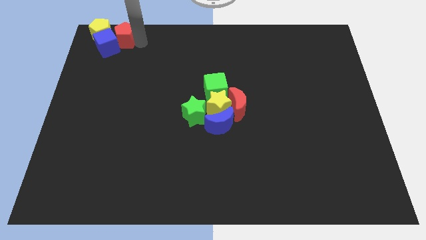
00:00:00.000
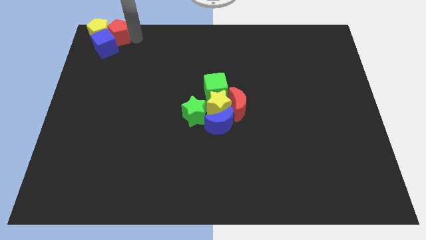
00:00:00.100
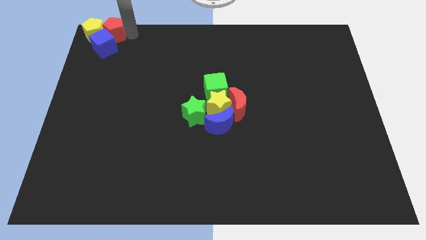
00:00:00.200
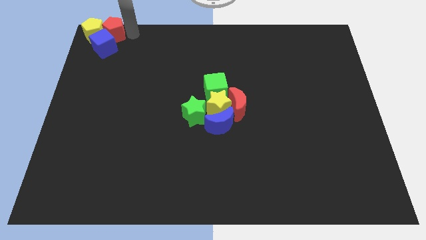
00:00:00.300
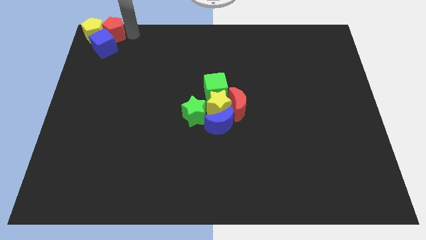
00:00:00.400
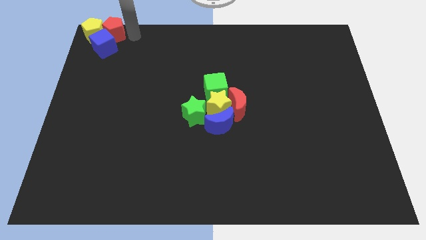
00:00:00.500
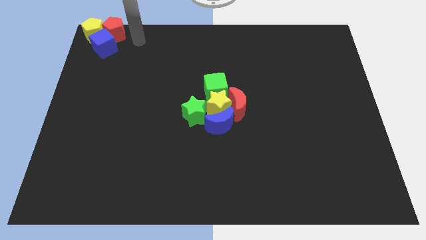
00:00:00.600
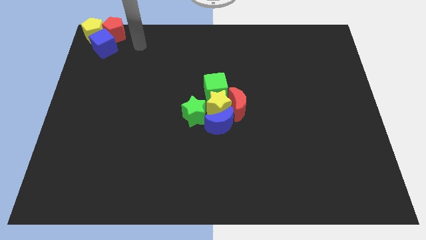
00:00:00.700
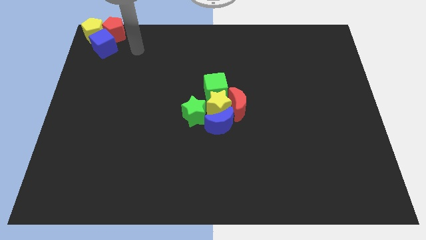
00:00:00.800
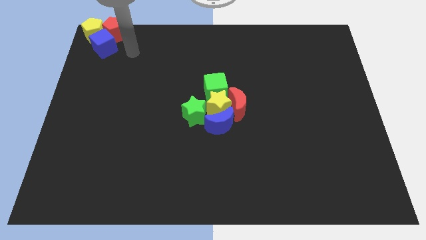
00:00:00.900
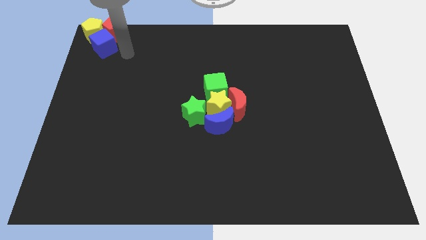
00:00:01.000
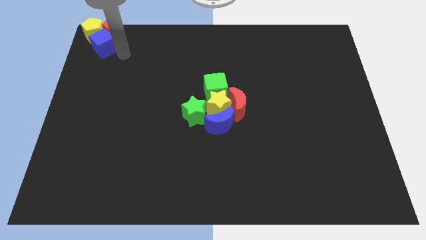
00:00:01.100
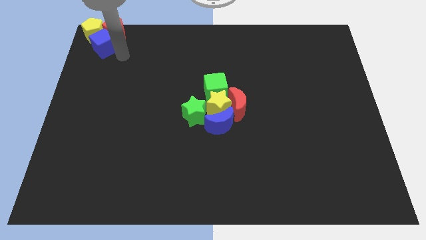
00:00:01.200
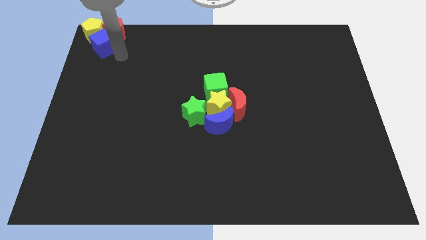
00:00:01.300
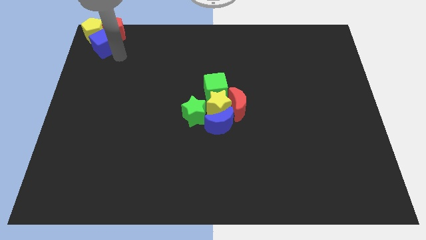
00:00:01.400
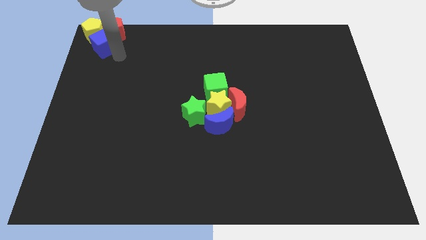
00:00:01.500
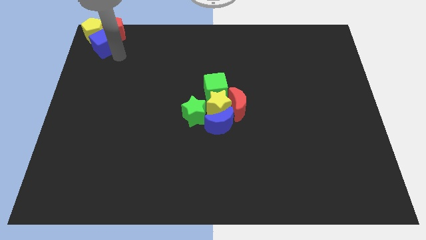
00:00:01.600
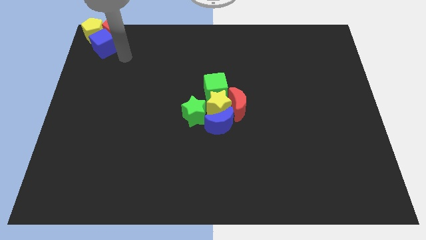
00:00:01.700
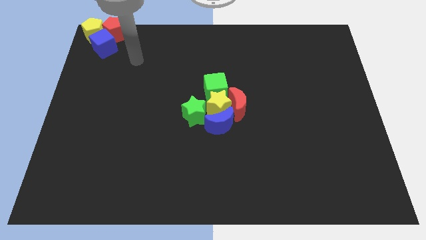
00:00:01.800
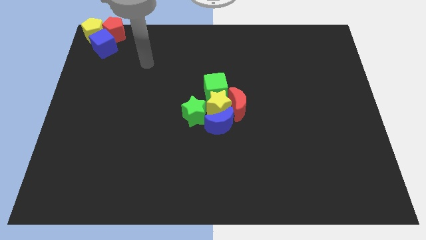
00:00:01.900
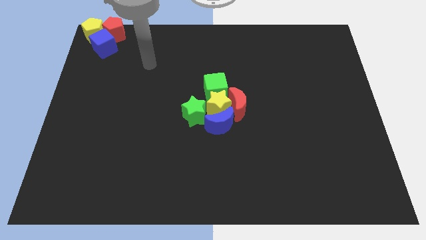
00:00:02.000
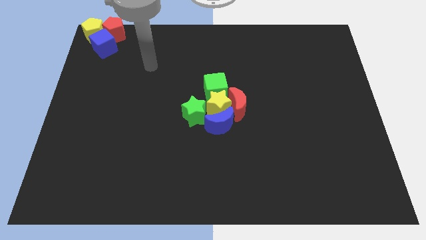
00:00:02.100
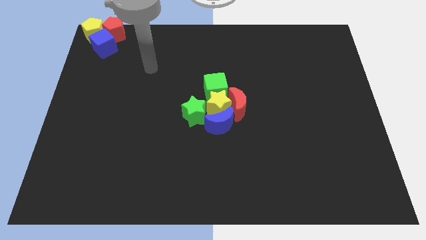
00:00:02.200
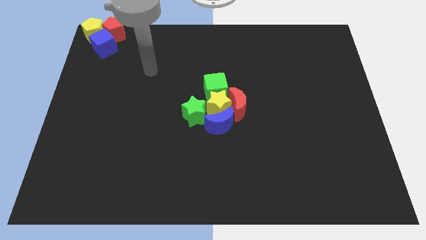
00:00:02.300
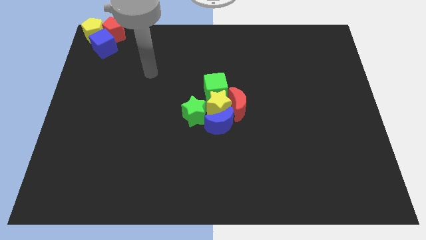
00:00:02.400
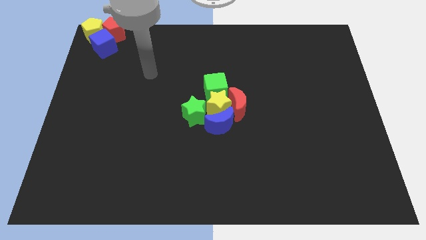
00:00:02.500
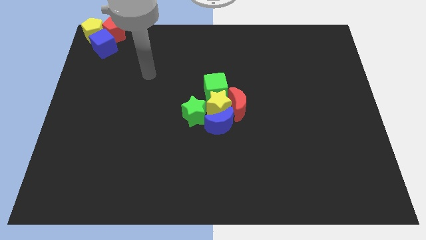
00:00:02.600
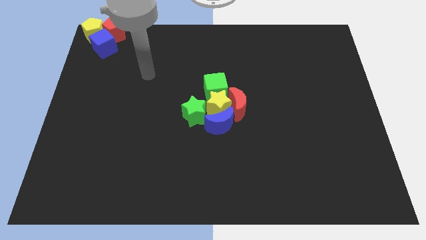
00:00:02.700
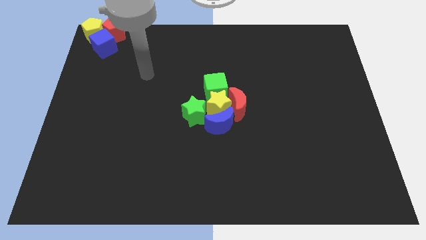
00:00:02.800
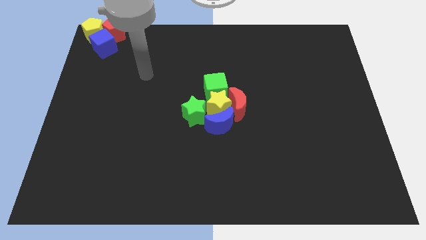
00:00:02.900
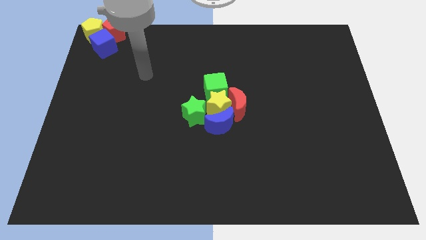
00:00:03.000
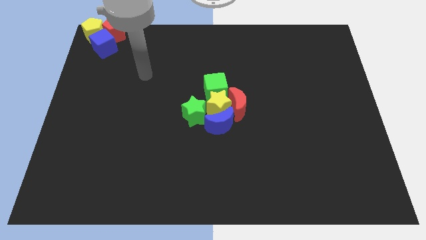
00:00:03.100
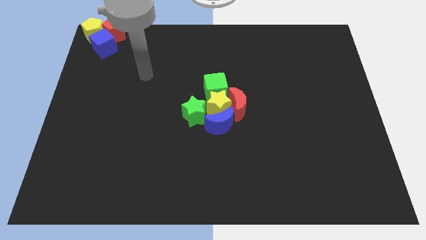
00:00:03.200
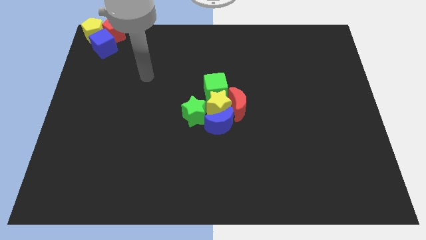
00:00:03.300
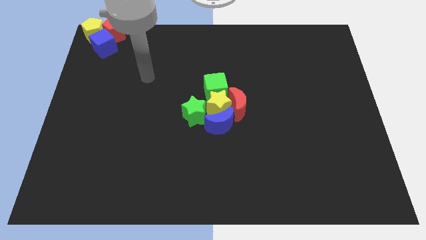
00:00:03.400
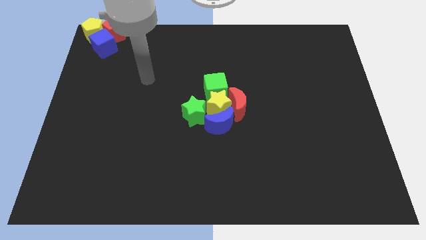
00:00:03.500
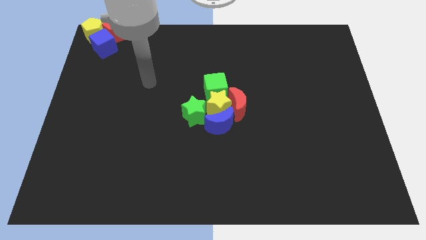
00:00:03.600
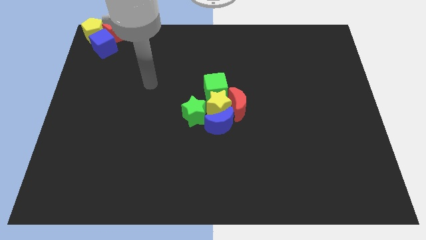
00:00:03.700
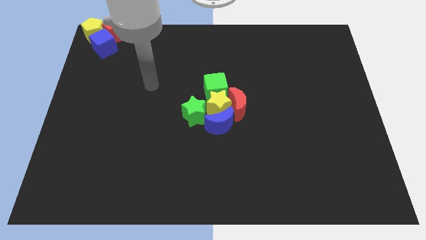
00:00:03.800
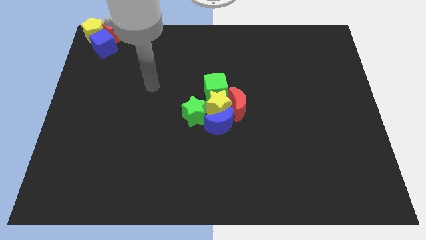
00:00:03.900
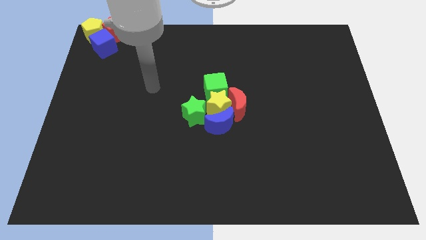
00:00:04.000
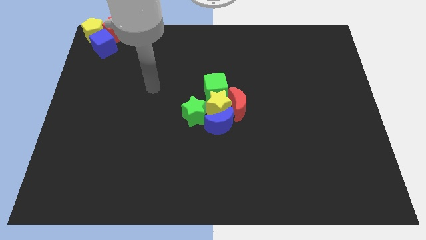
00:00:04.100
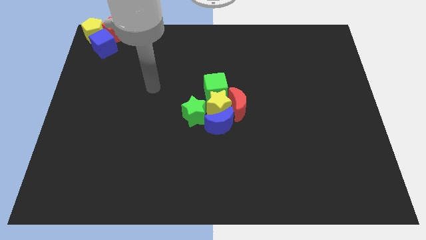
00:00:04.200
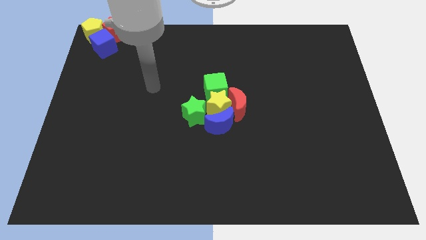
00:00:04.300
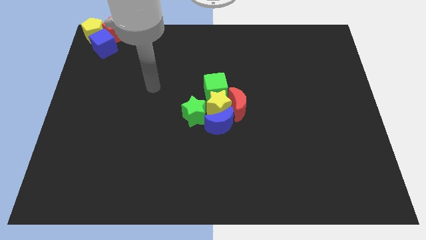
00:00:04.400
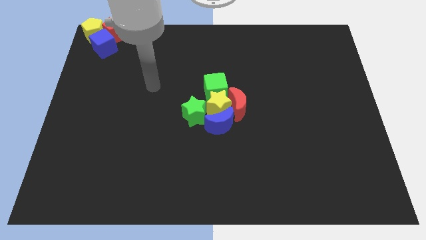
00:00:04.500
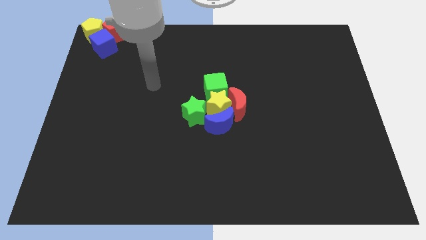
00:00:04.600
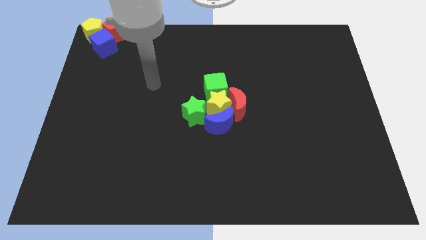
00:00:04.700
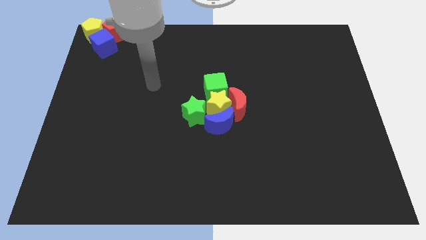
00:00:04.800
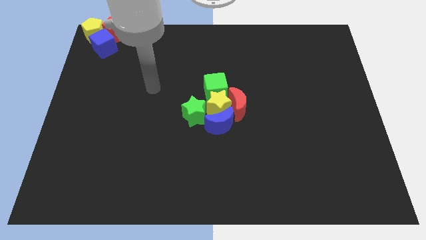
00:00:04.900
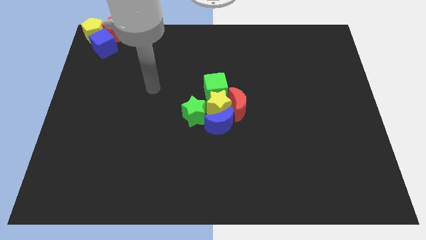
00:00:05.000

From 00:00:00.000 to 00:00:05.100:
move your arm away from the group of blocks

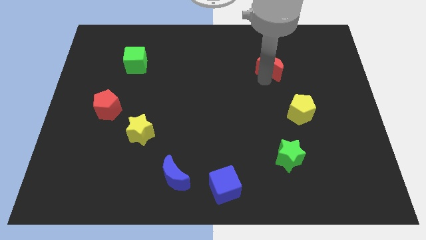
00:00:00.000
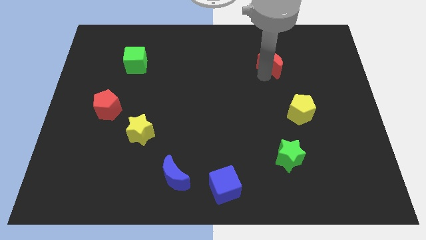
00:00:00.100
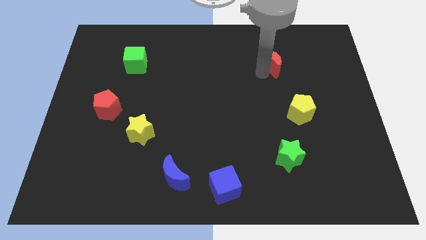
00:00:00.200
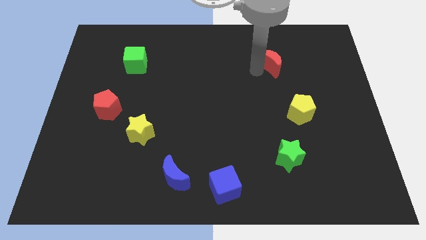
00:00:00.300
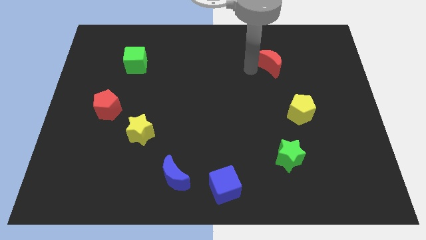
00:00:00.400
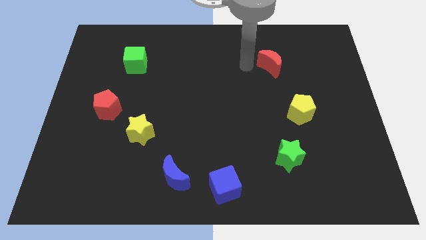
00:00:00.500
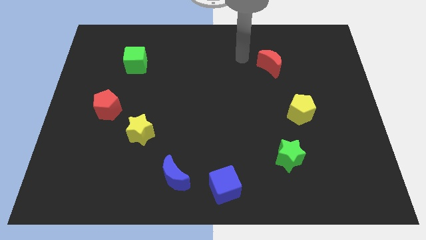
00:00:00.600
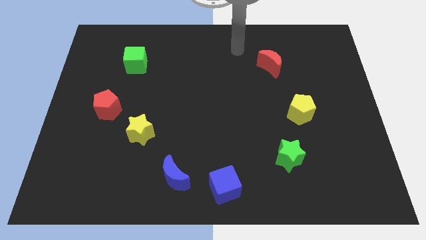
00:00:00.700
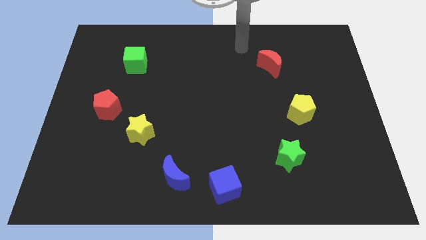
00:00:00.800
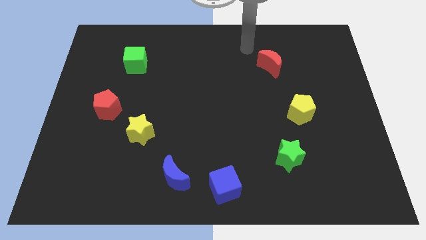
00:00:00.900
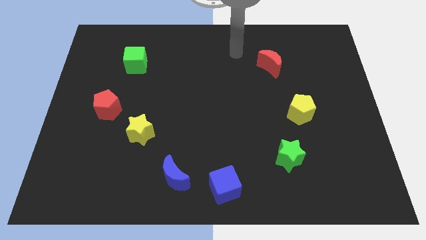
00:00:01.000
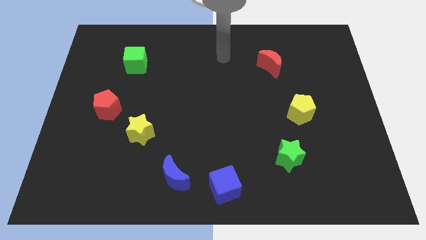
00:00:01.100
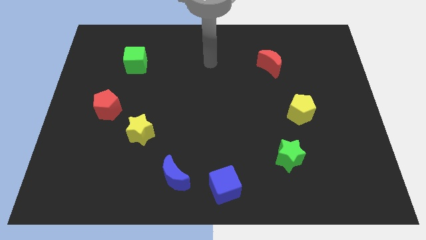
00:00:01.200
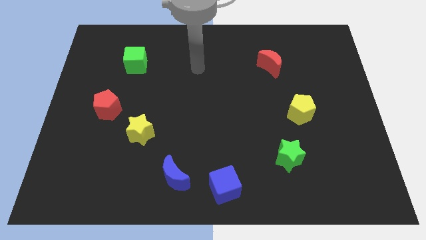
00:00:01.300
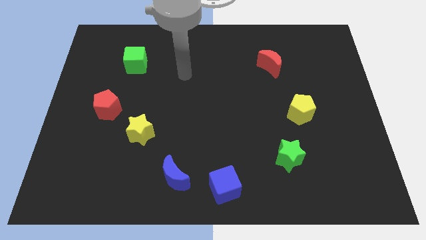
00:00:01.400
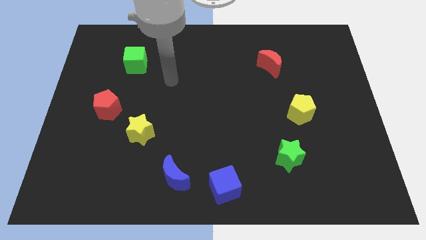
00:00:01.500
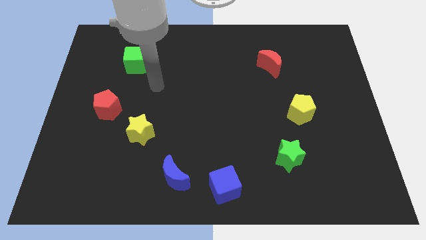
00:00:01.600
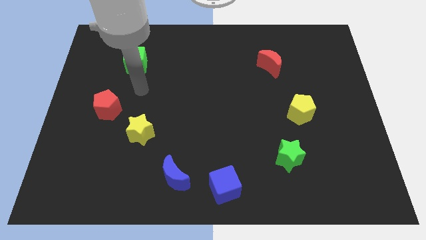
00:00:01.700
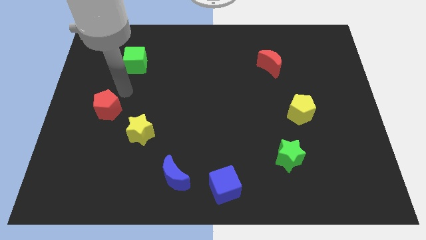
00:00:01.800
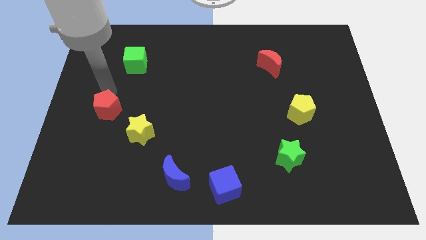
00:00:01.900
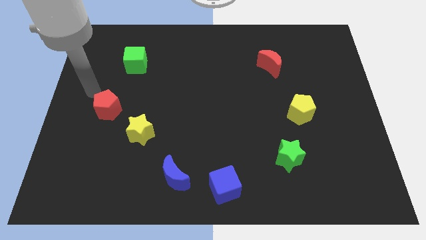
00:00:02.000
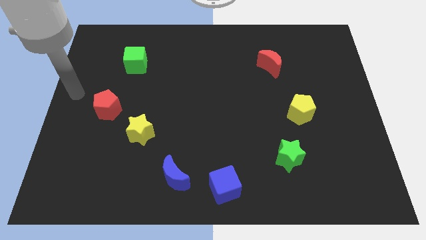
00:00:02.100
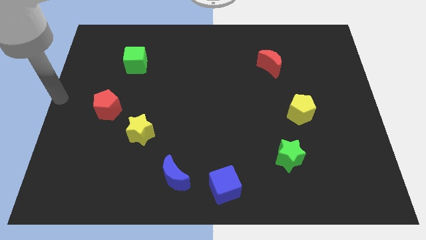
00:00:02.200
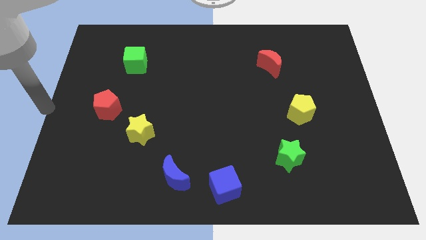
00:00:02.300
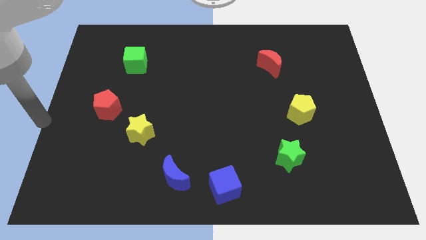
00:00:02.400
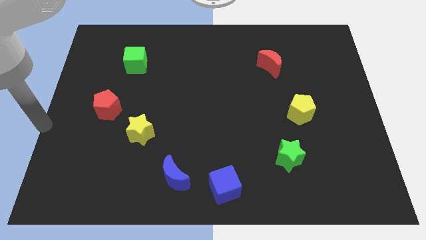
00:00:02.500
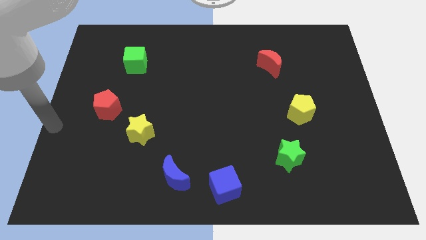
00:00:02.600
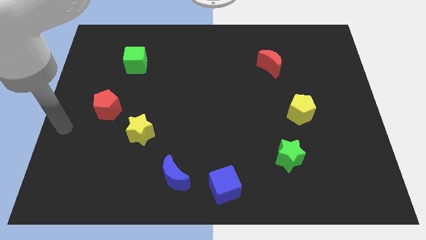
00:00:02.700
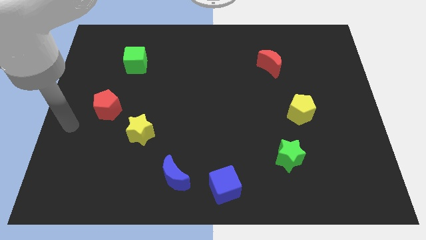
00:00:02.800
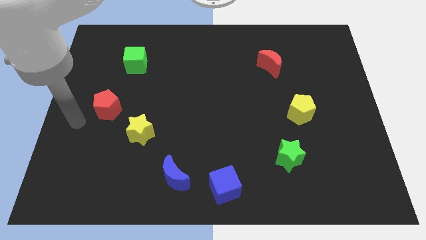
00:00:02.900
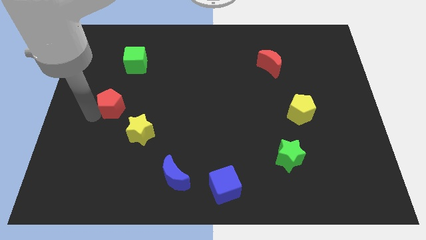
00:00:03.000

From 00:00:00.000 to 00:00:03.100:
place the arm left to the red pentagon

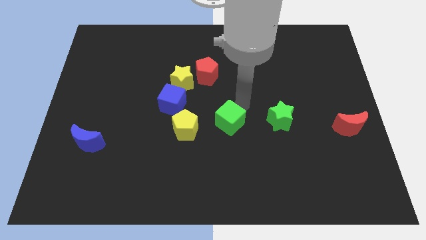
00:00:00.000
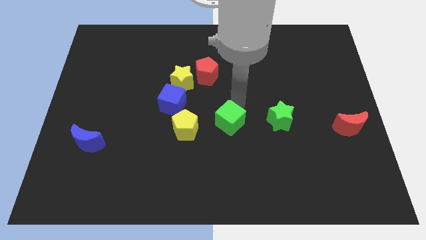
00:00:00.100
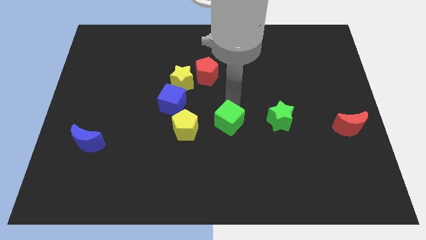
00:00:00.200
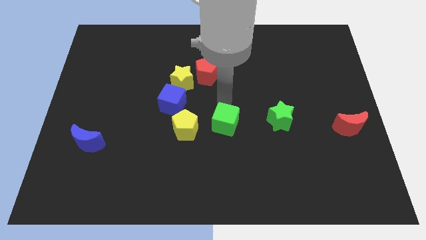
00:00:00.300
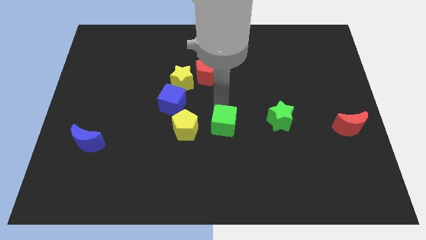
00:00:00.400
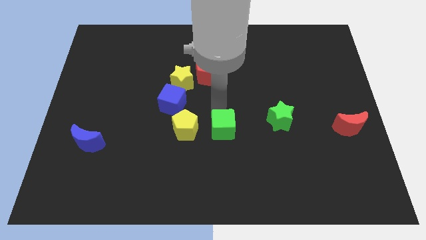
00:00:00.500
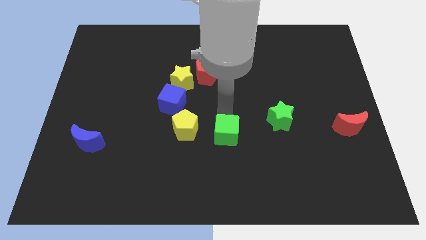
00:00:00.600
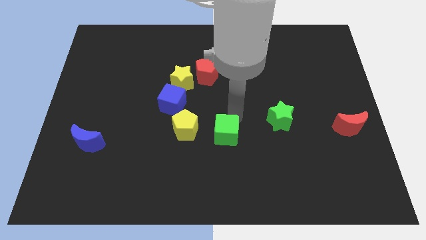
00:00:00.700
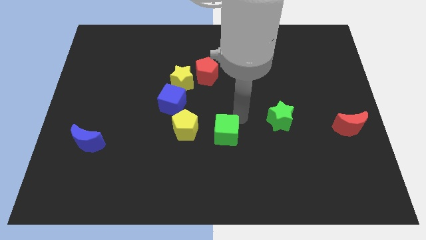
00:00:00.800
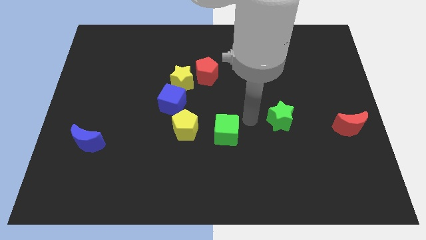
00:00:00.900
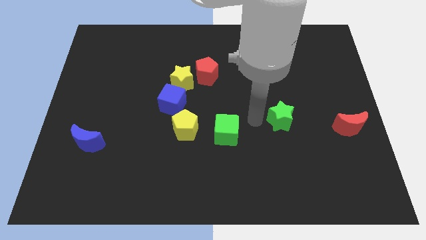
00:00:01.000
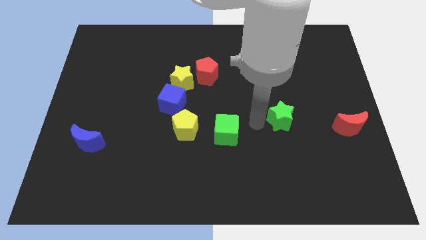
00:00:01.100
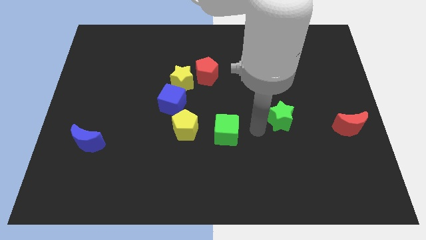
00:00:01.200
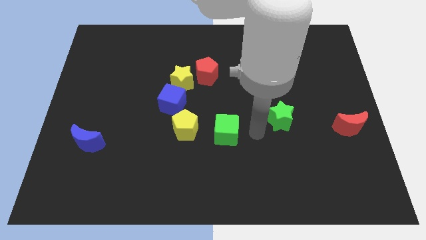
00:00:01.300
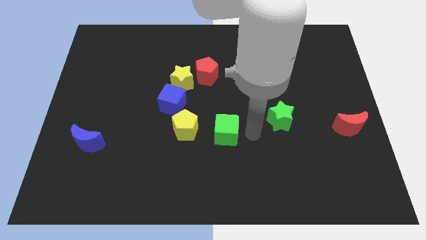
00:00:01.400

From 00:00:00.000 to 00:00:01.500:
place the green cube to the right of the yellow pentagon
